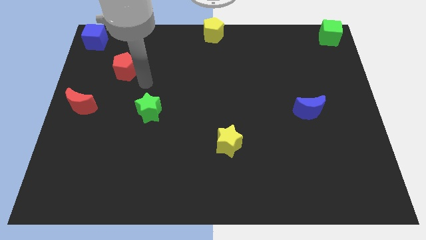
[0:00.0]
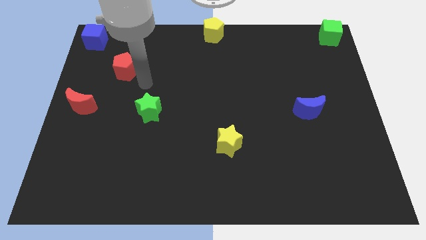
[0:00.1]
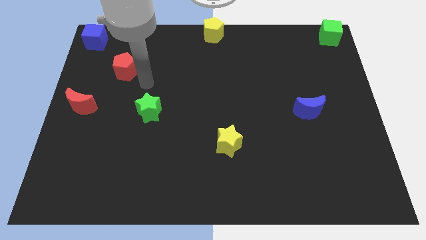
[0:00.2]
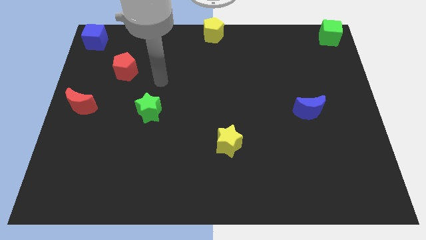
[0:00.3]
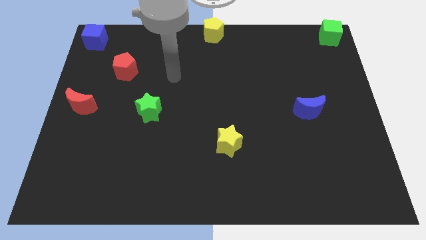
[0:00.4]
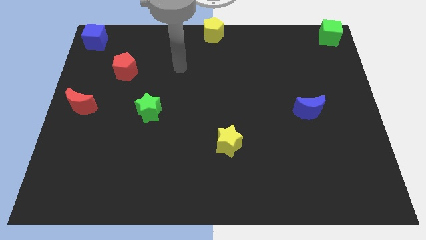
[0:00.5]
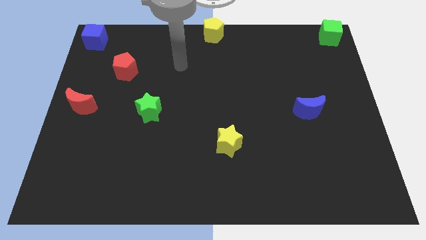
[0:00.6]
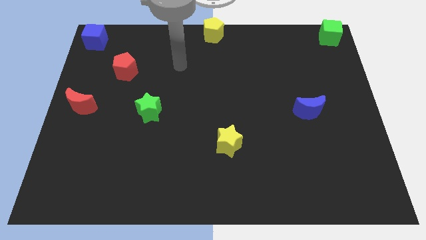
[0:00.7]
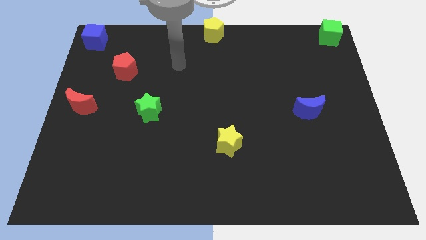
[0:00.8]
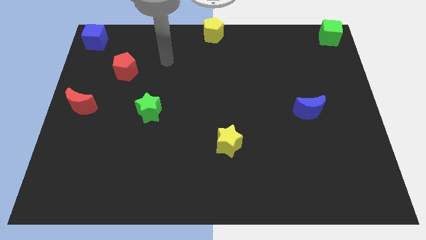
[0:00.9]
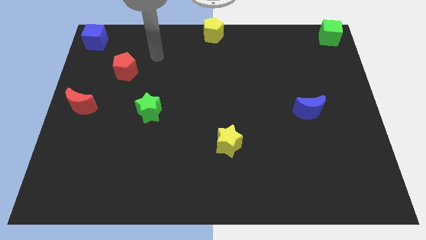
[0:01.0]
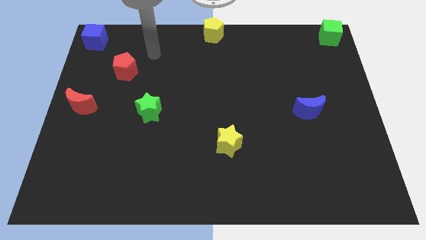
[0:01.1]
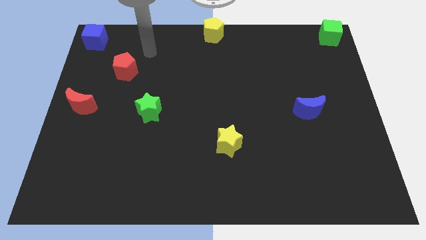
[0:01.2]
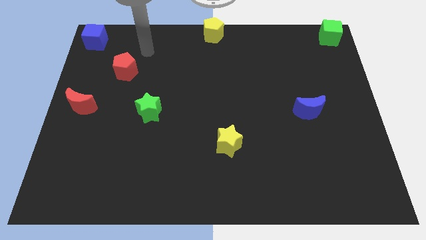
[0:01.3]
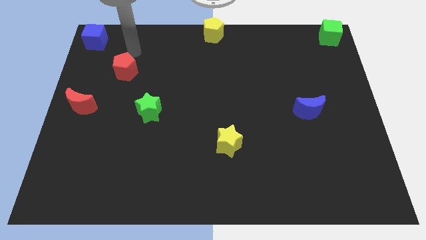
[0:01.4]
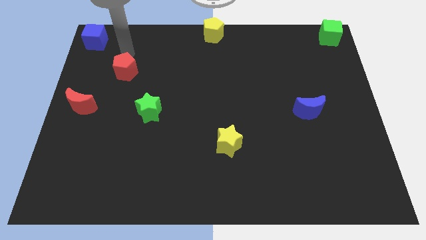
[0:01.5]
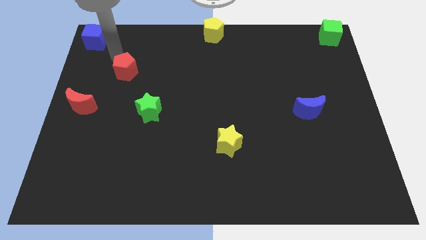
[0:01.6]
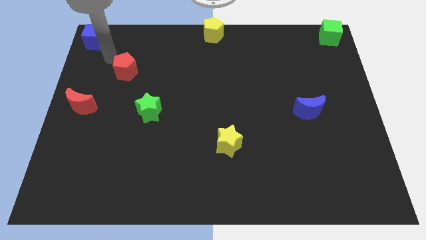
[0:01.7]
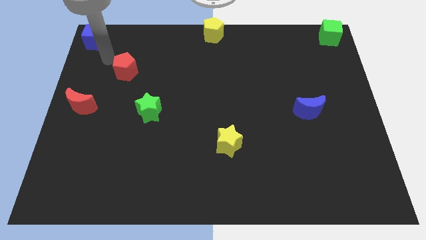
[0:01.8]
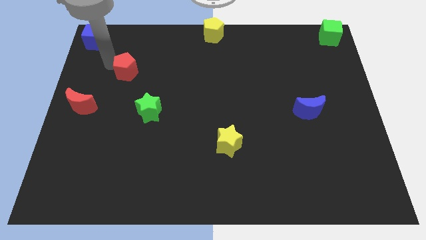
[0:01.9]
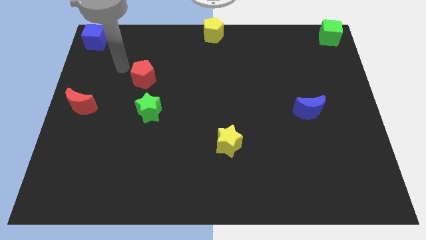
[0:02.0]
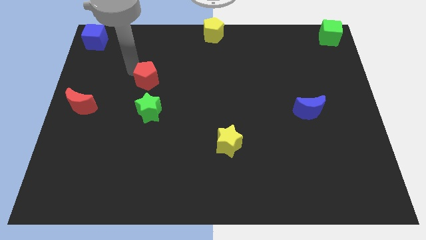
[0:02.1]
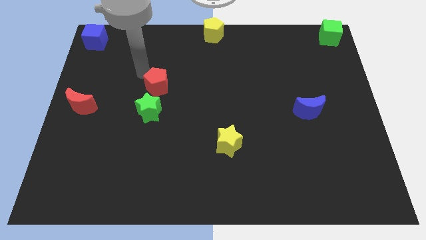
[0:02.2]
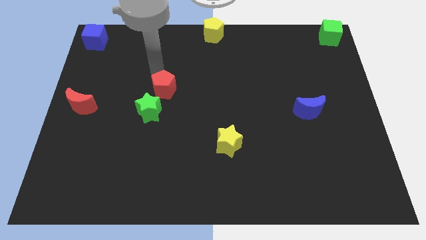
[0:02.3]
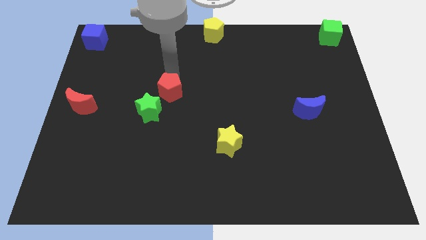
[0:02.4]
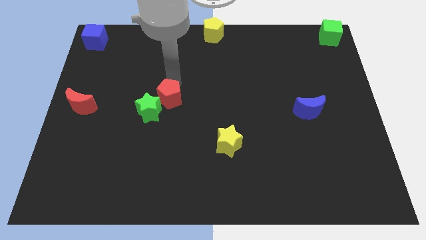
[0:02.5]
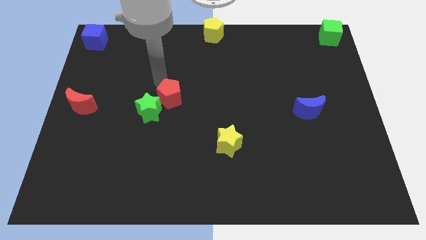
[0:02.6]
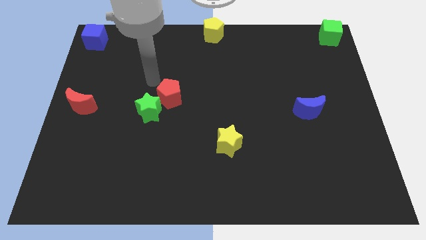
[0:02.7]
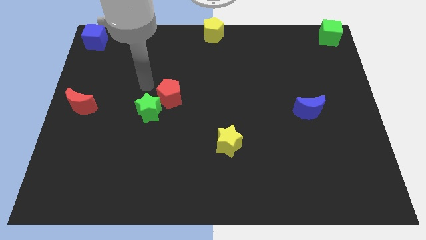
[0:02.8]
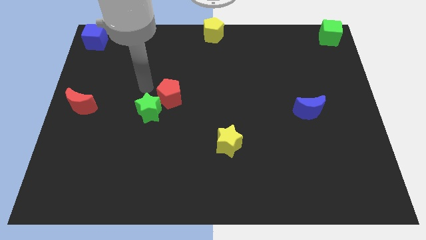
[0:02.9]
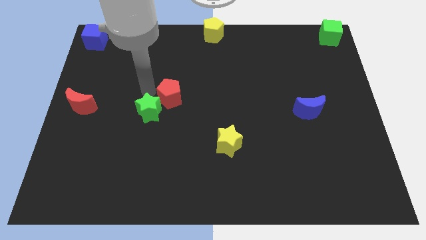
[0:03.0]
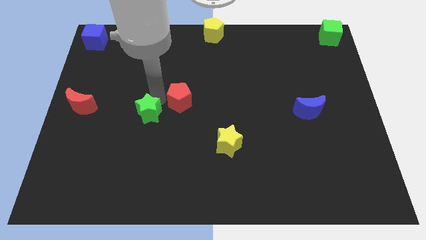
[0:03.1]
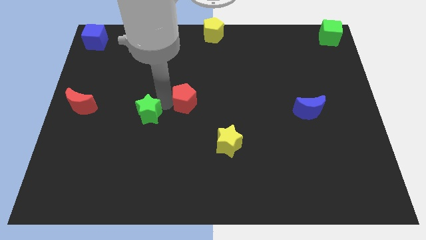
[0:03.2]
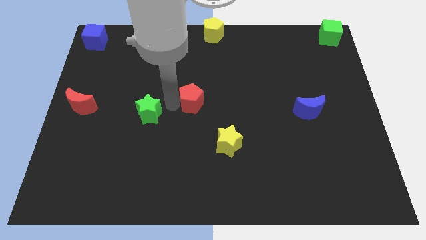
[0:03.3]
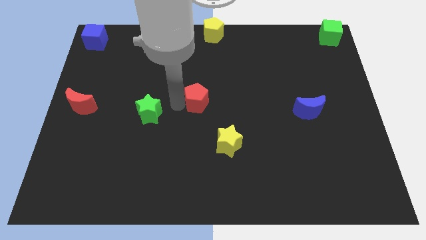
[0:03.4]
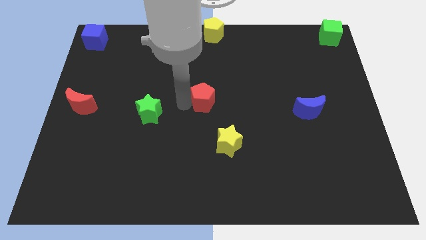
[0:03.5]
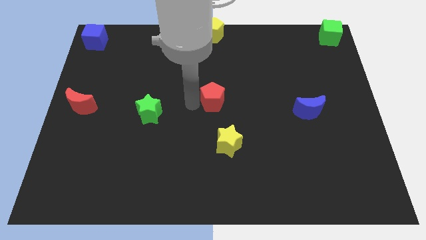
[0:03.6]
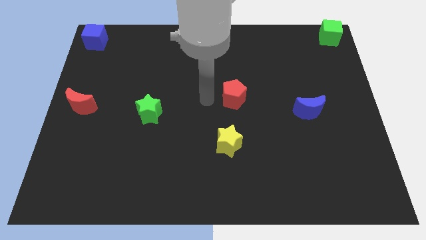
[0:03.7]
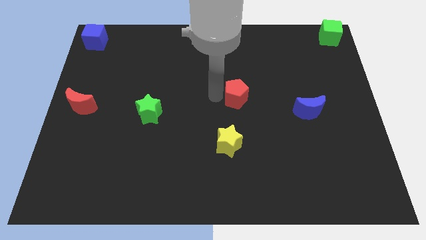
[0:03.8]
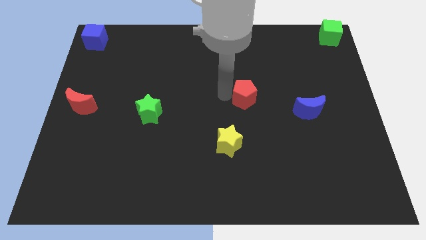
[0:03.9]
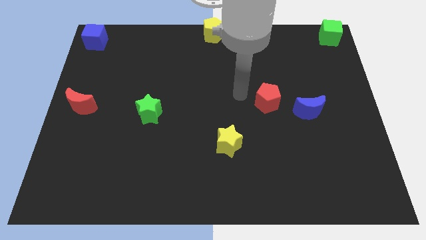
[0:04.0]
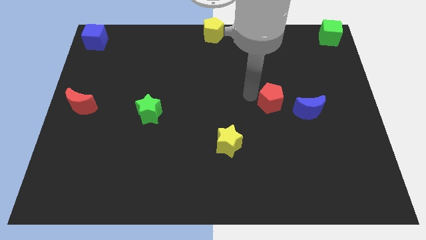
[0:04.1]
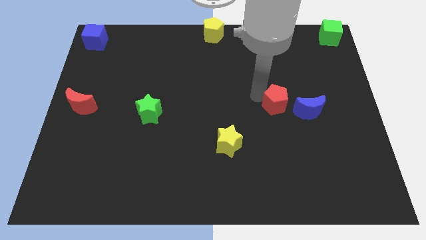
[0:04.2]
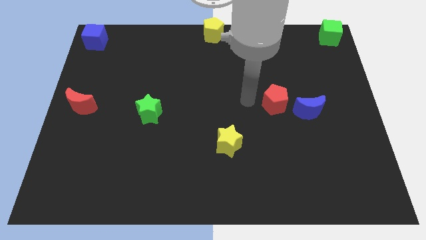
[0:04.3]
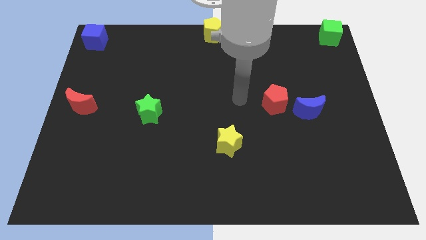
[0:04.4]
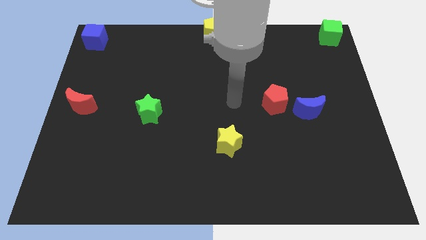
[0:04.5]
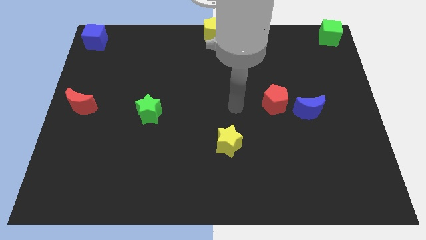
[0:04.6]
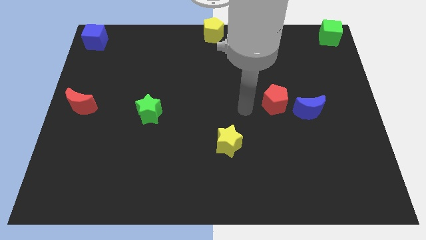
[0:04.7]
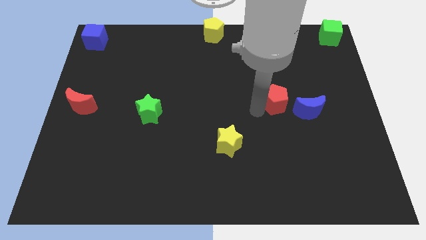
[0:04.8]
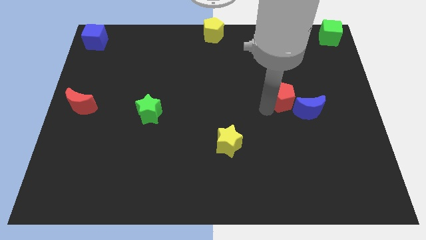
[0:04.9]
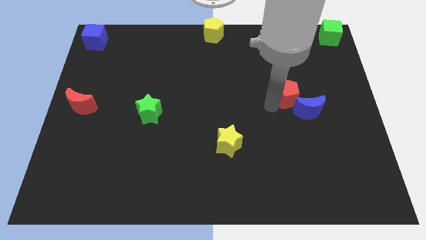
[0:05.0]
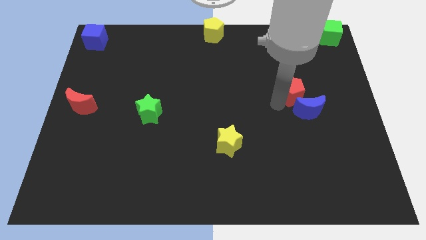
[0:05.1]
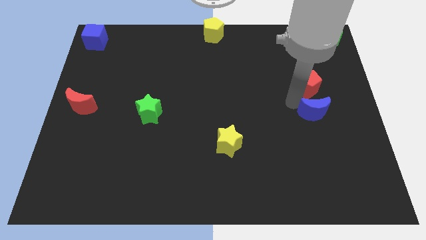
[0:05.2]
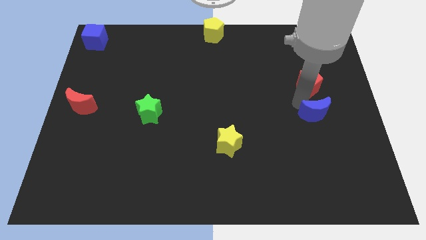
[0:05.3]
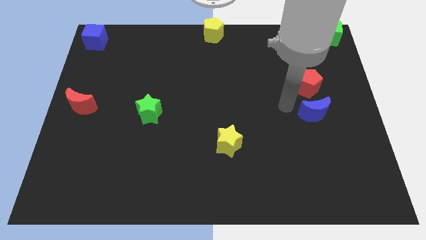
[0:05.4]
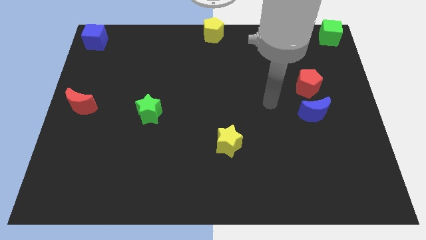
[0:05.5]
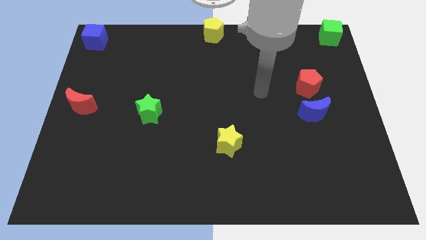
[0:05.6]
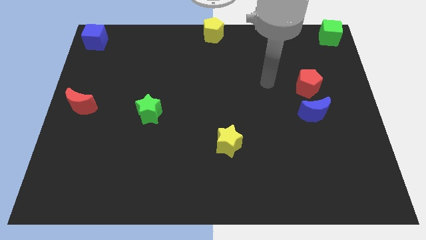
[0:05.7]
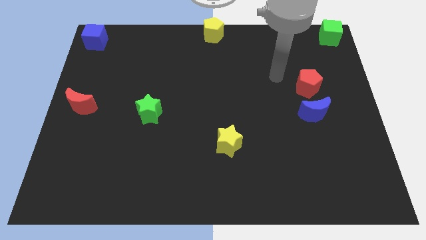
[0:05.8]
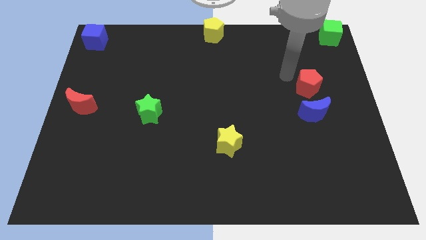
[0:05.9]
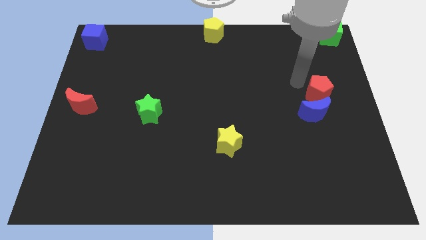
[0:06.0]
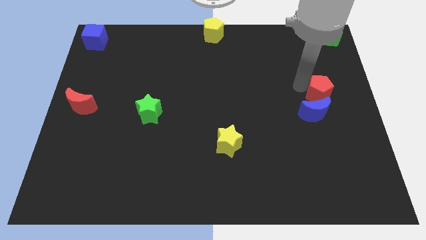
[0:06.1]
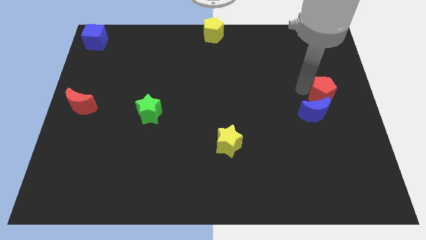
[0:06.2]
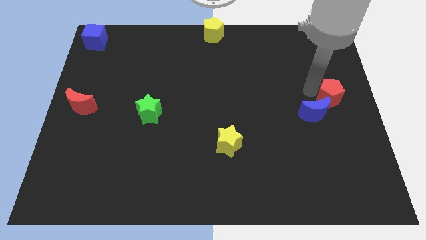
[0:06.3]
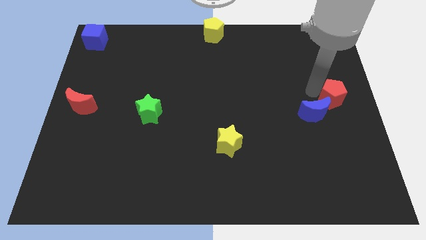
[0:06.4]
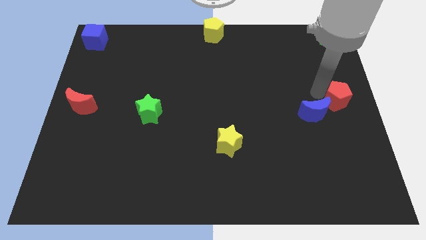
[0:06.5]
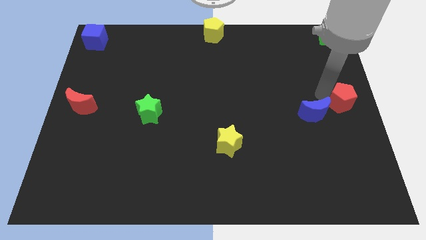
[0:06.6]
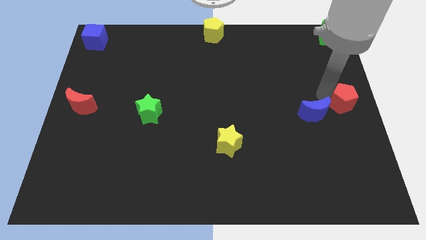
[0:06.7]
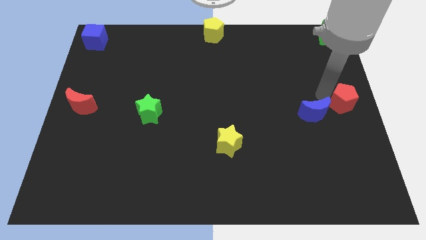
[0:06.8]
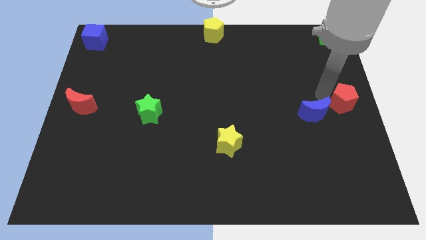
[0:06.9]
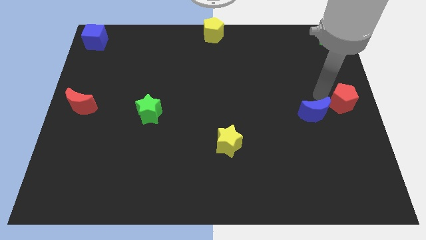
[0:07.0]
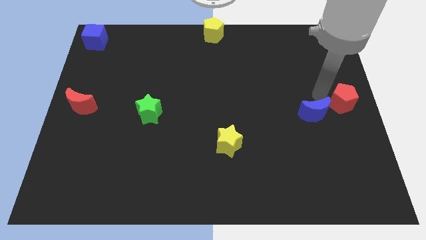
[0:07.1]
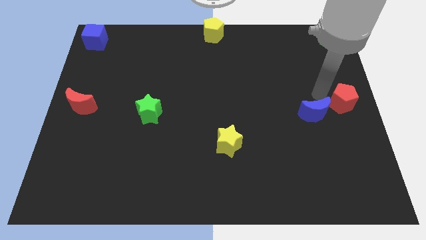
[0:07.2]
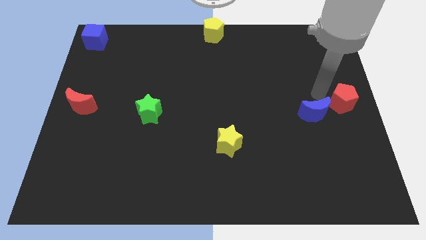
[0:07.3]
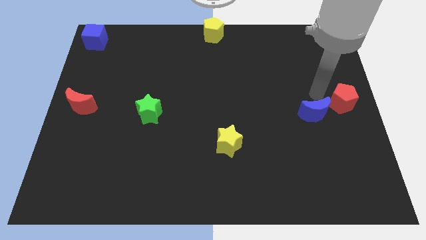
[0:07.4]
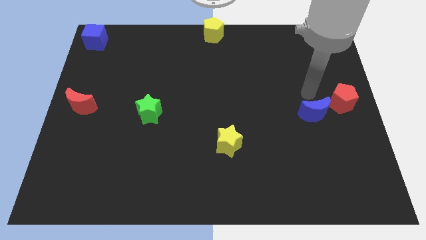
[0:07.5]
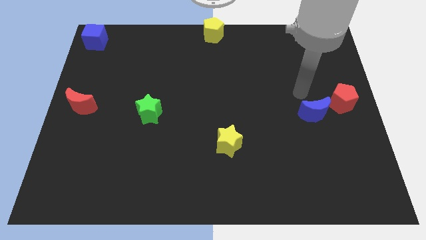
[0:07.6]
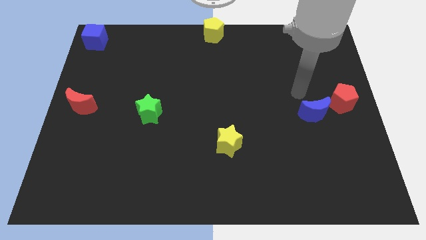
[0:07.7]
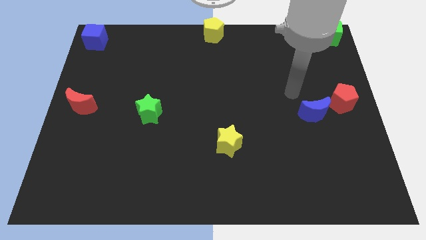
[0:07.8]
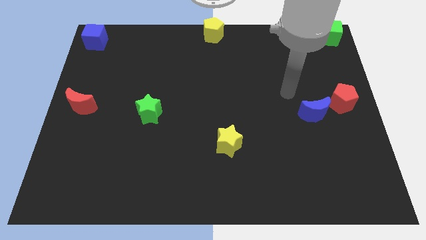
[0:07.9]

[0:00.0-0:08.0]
push the red pentagon to the right center of the board

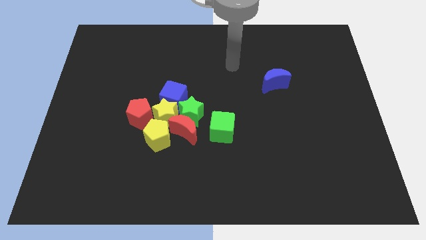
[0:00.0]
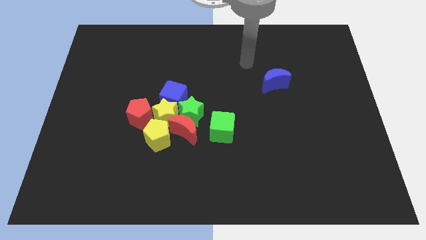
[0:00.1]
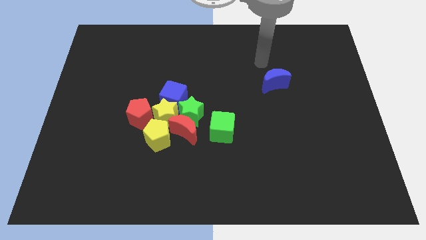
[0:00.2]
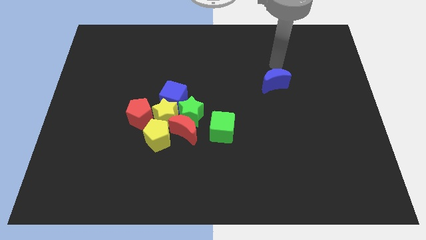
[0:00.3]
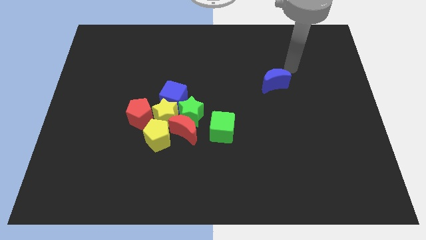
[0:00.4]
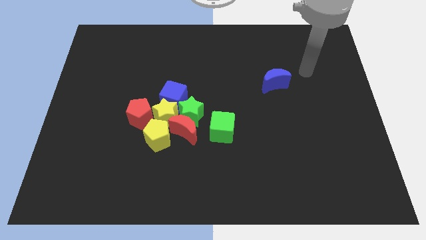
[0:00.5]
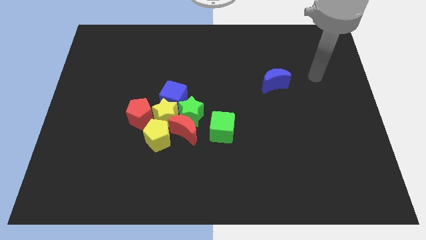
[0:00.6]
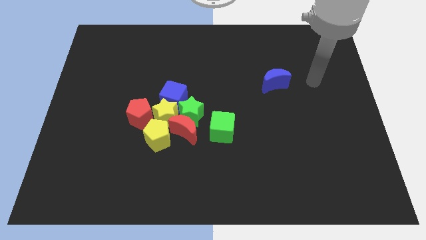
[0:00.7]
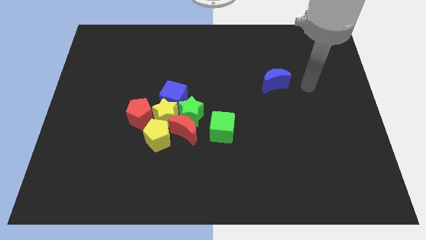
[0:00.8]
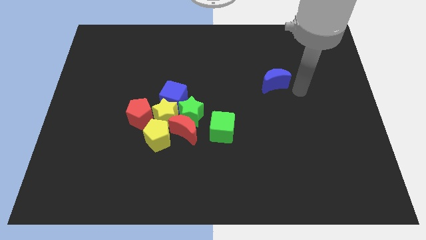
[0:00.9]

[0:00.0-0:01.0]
place the arm close to the blue crescent

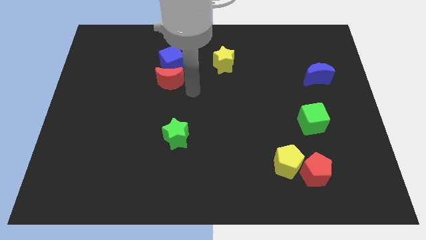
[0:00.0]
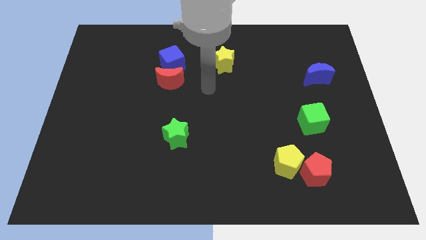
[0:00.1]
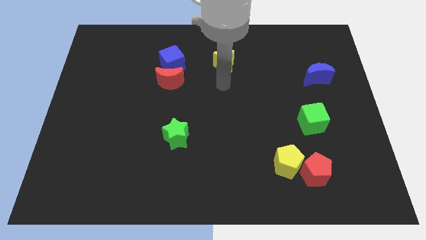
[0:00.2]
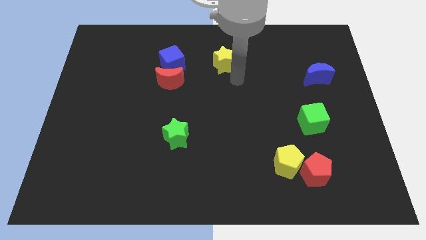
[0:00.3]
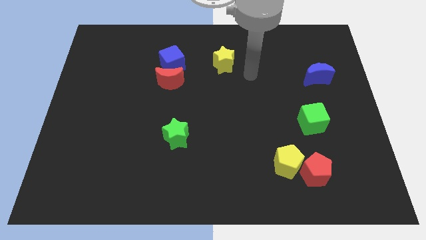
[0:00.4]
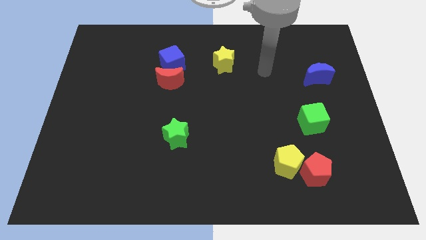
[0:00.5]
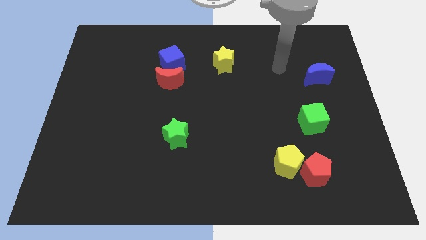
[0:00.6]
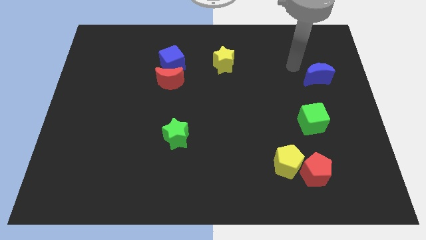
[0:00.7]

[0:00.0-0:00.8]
move your hand away from the red crescent
